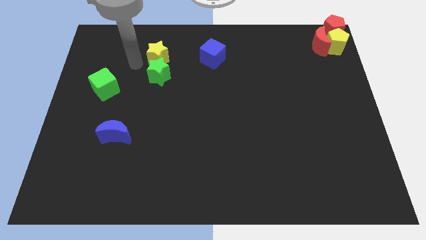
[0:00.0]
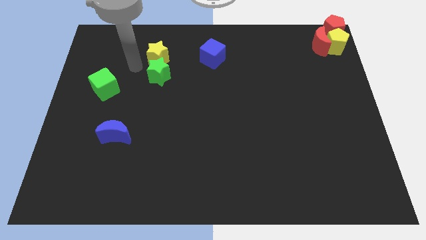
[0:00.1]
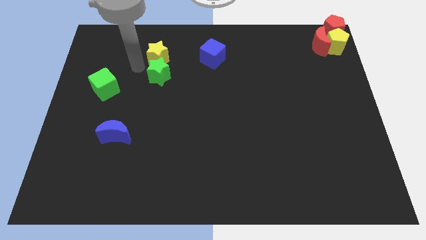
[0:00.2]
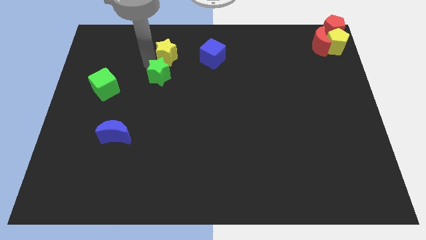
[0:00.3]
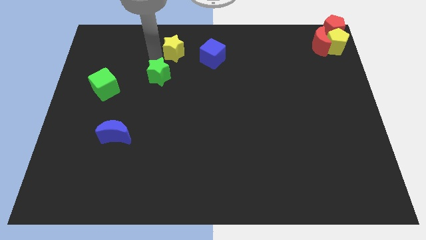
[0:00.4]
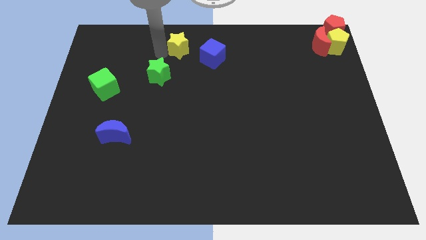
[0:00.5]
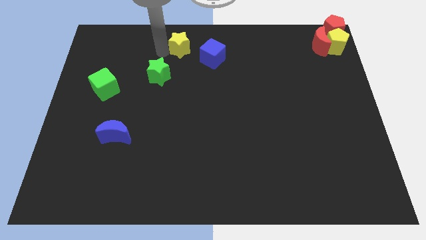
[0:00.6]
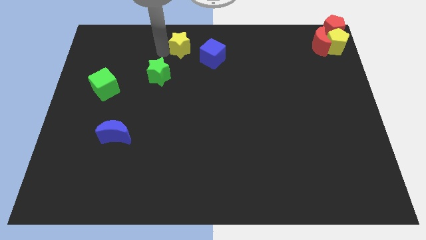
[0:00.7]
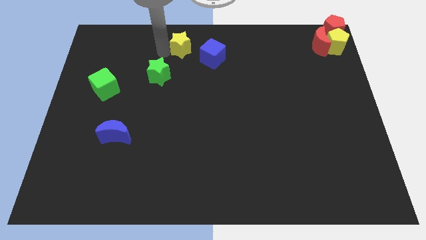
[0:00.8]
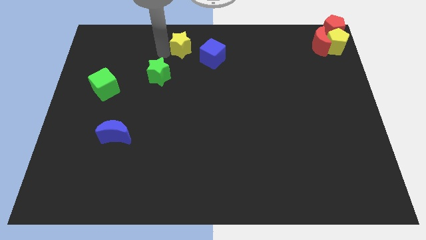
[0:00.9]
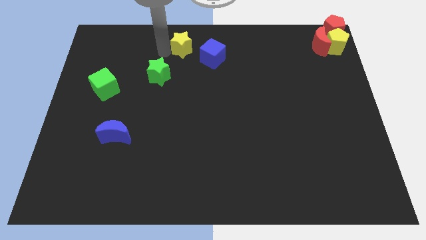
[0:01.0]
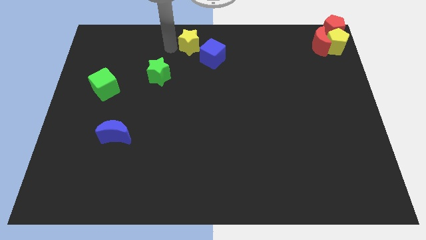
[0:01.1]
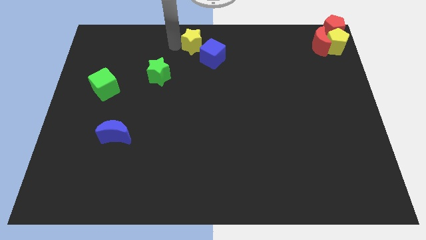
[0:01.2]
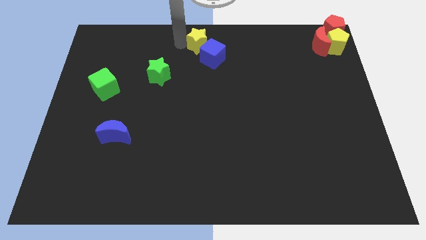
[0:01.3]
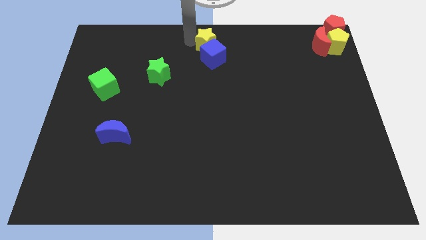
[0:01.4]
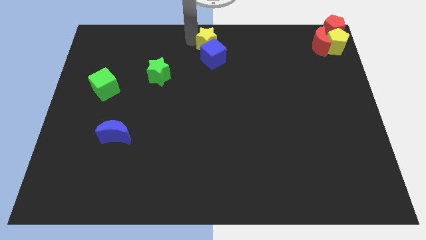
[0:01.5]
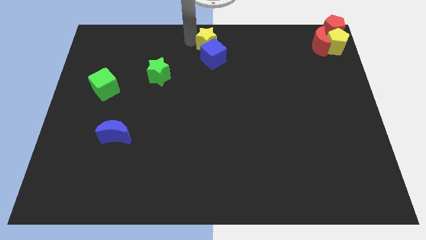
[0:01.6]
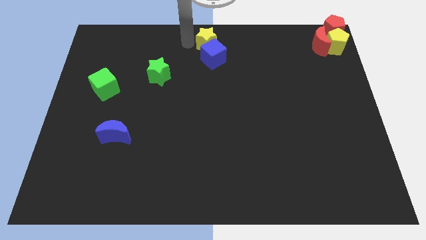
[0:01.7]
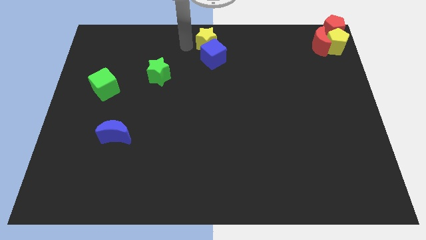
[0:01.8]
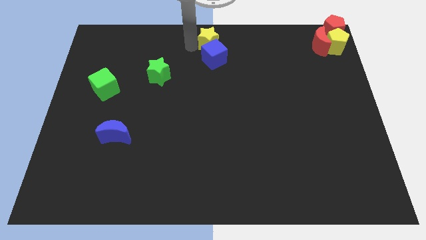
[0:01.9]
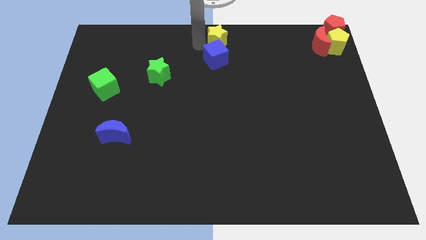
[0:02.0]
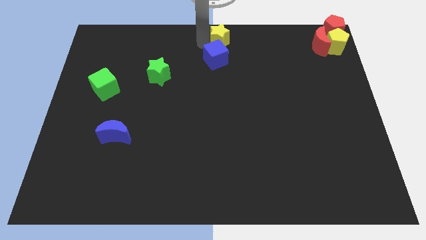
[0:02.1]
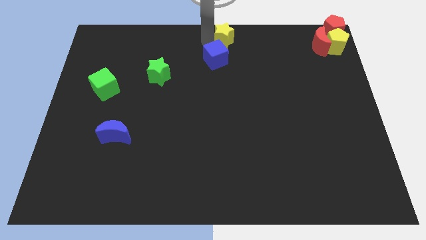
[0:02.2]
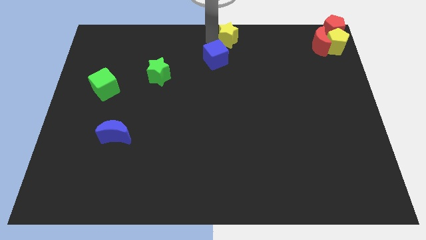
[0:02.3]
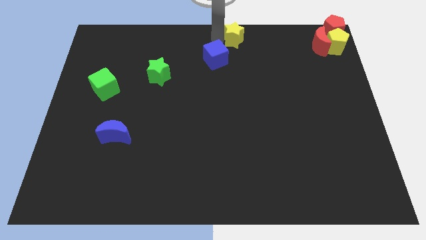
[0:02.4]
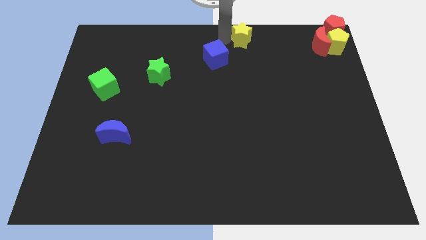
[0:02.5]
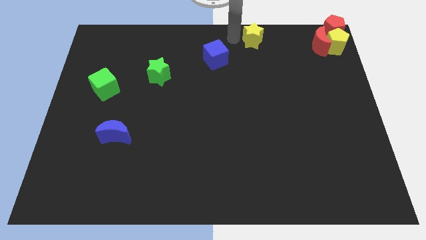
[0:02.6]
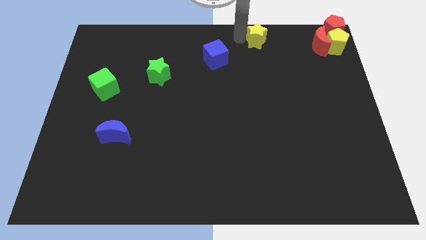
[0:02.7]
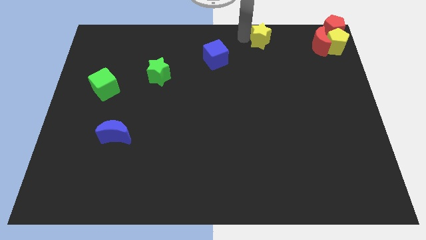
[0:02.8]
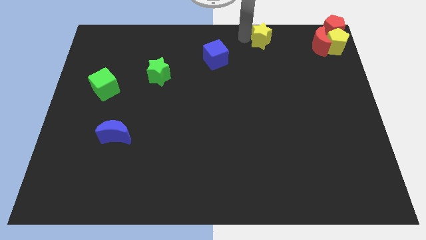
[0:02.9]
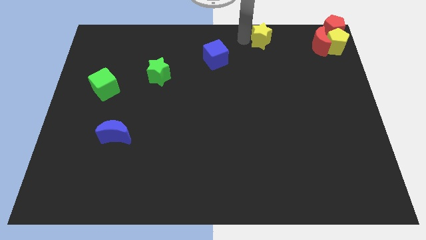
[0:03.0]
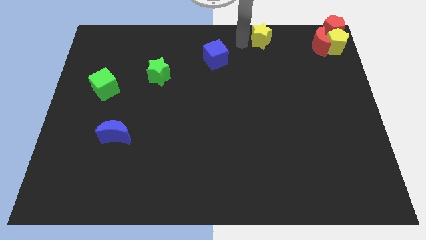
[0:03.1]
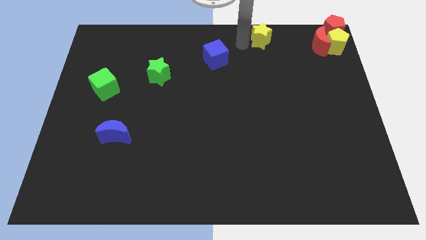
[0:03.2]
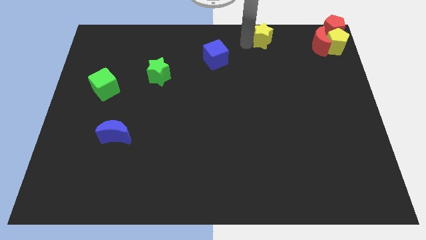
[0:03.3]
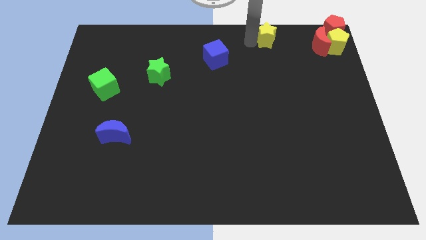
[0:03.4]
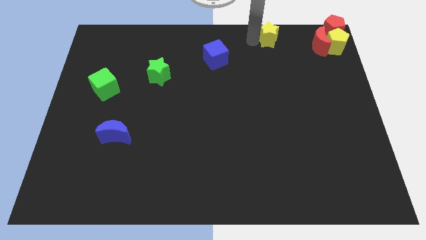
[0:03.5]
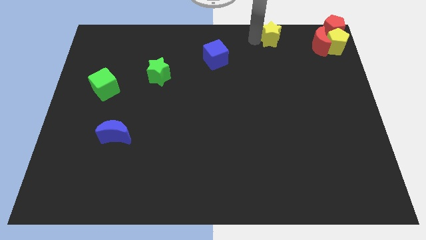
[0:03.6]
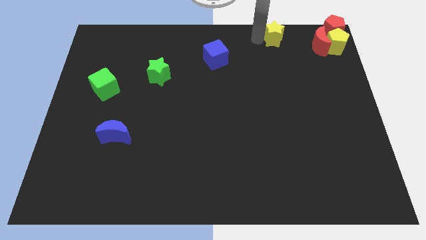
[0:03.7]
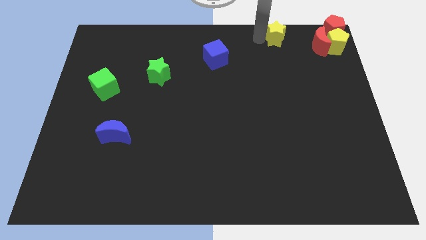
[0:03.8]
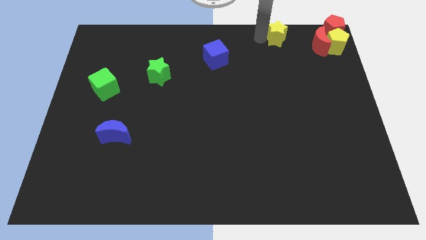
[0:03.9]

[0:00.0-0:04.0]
push the yellow star towards the group of blocks at the top right side of the board

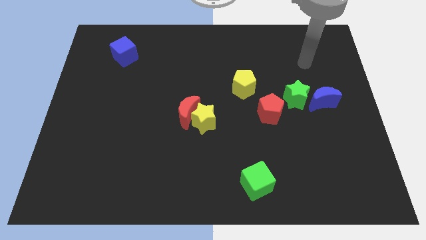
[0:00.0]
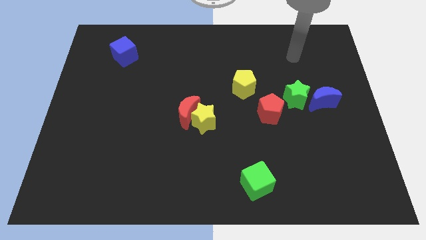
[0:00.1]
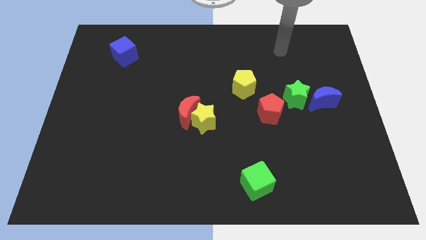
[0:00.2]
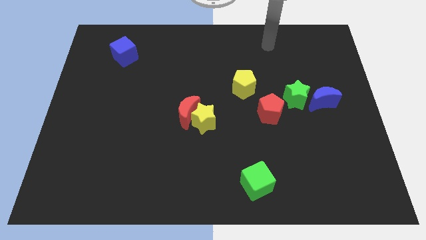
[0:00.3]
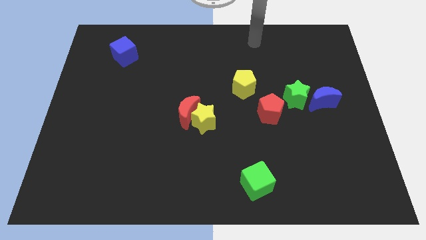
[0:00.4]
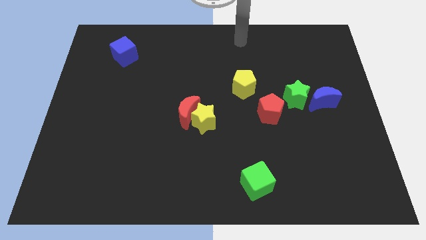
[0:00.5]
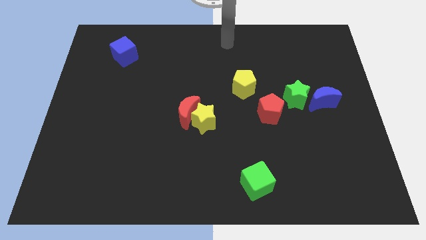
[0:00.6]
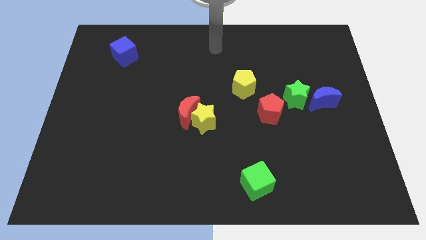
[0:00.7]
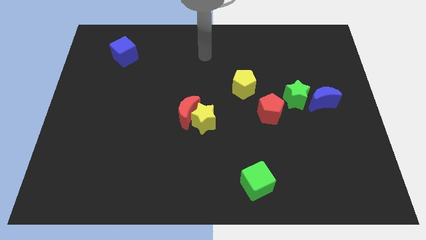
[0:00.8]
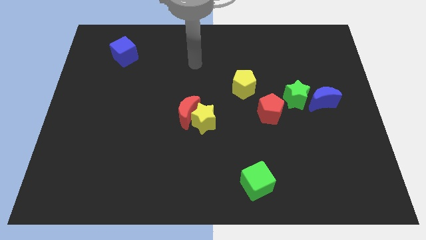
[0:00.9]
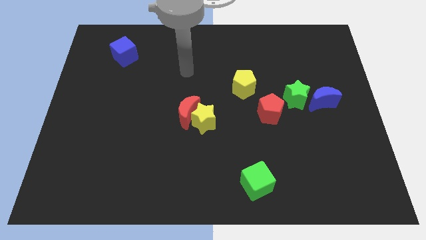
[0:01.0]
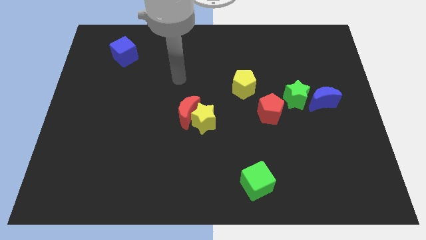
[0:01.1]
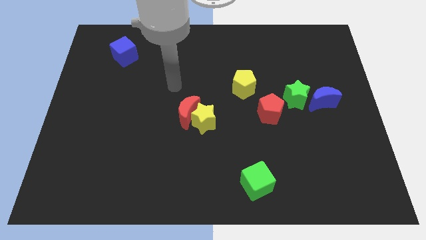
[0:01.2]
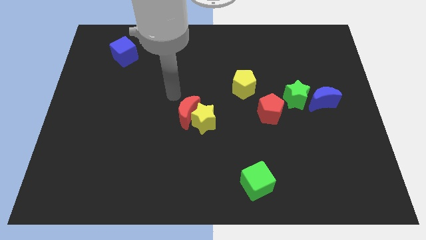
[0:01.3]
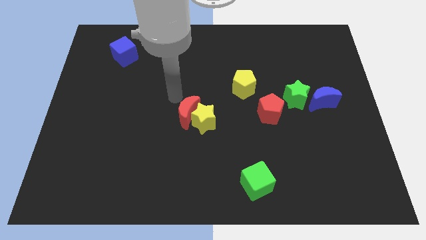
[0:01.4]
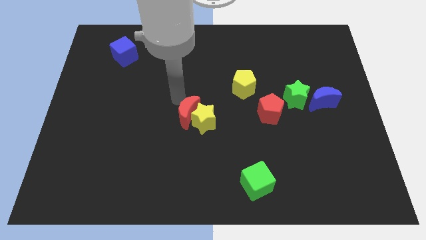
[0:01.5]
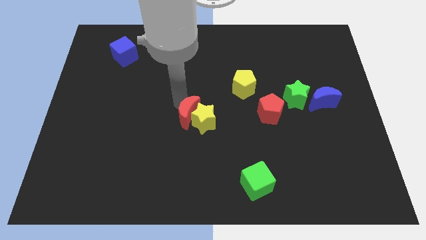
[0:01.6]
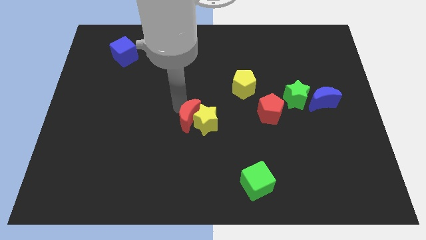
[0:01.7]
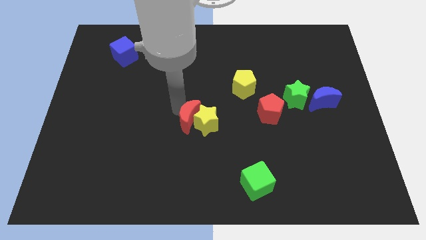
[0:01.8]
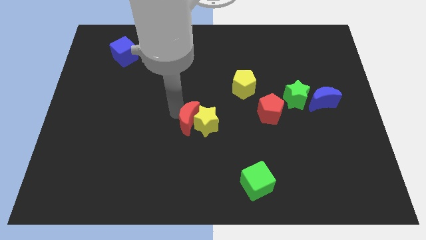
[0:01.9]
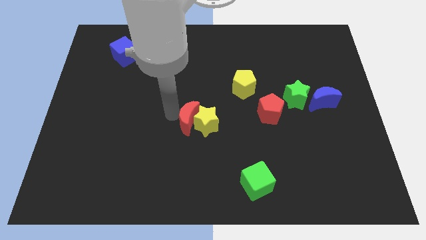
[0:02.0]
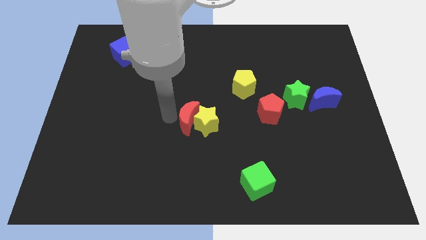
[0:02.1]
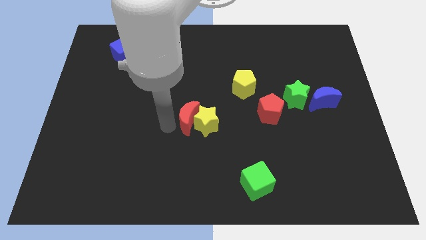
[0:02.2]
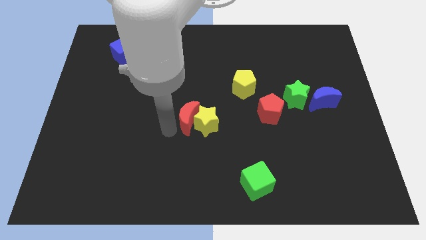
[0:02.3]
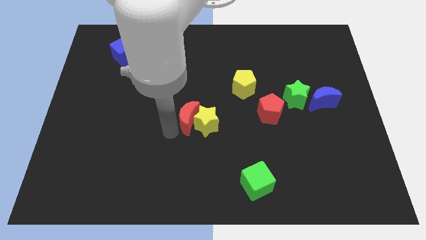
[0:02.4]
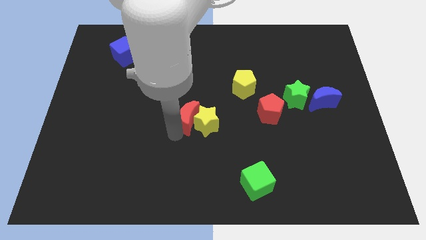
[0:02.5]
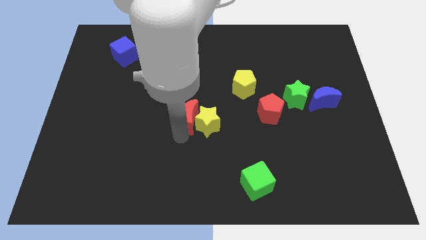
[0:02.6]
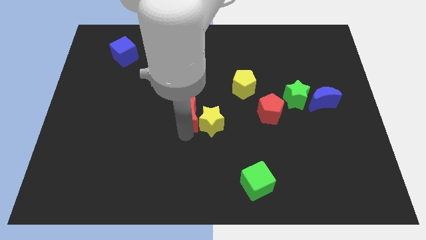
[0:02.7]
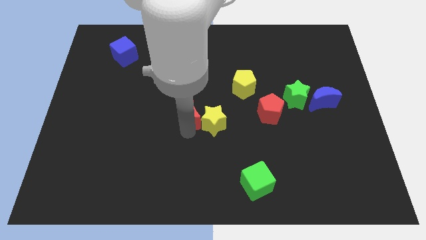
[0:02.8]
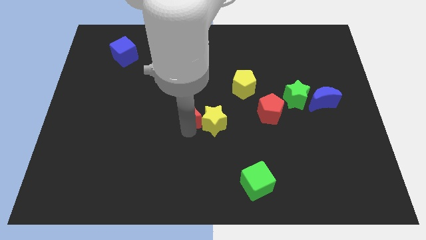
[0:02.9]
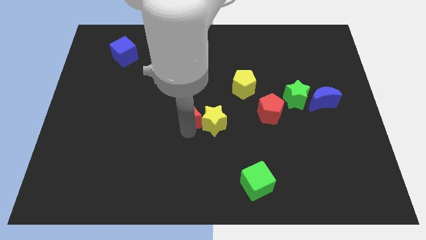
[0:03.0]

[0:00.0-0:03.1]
push the red moon and yellow star slightly to the center

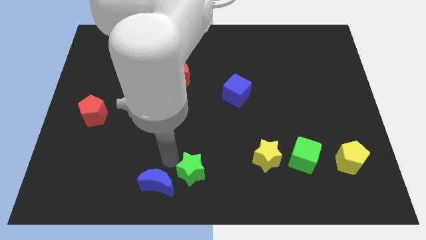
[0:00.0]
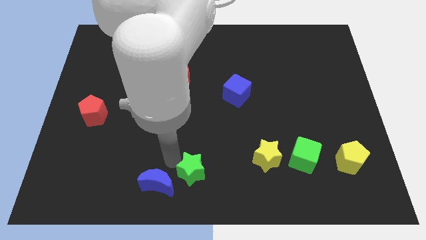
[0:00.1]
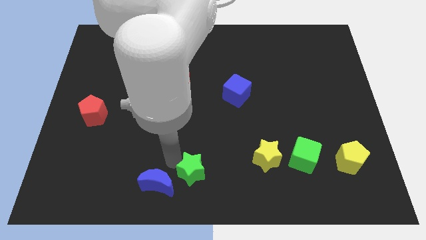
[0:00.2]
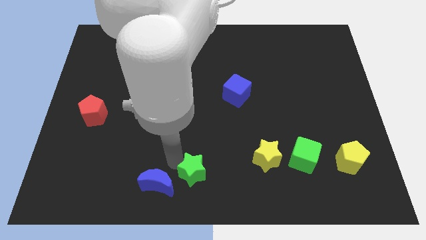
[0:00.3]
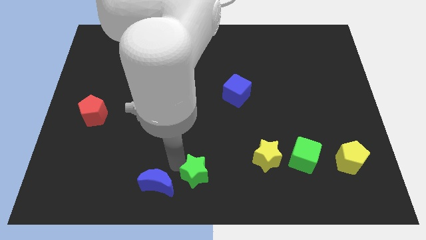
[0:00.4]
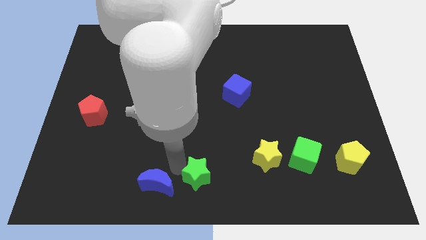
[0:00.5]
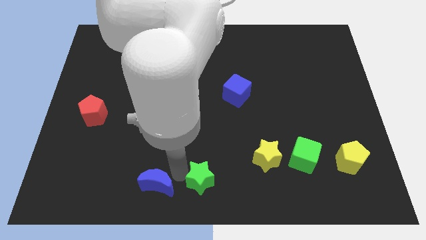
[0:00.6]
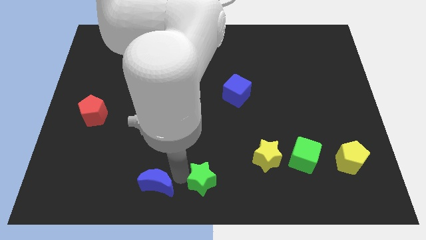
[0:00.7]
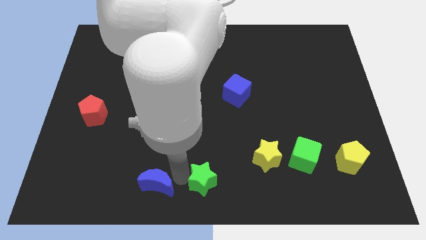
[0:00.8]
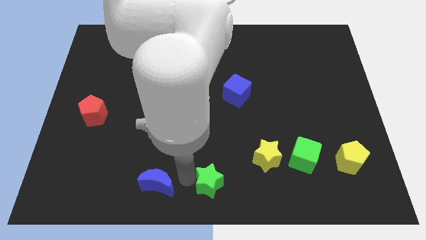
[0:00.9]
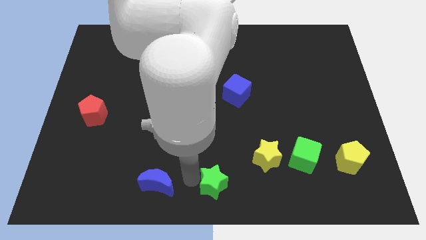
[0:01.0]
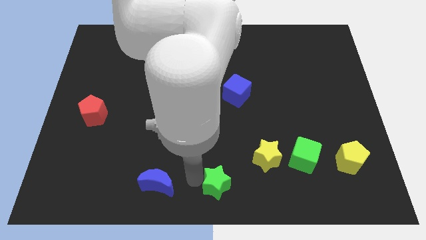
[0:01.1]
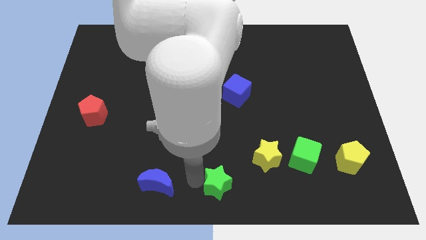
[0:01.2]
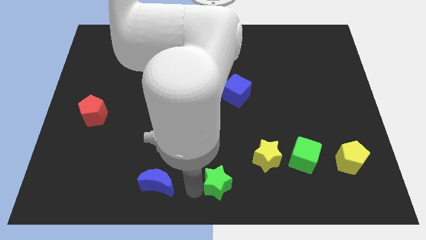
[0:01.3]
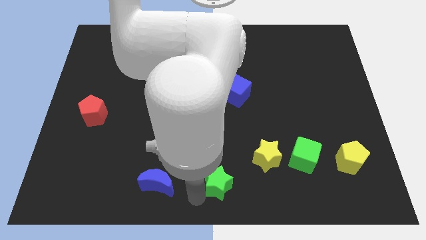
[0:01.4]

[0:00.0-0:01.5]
move the green star parallel to the right of the blue moon

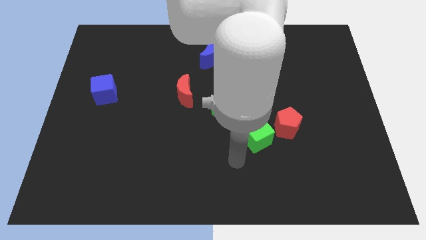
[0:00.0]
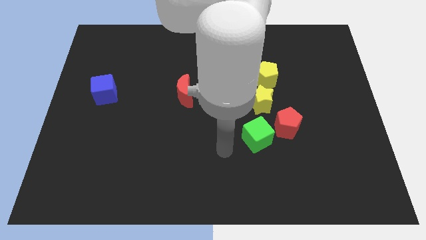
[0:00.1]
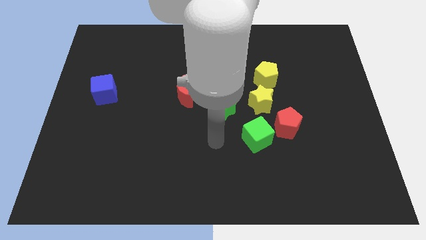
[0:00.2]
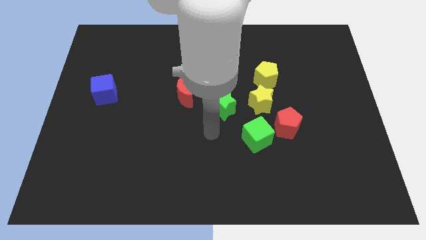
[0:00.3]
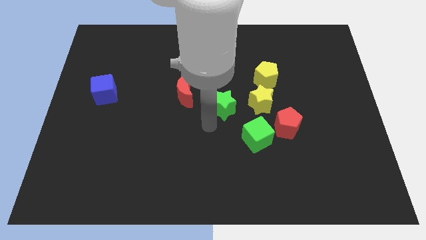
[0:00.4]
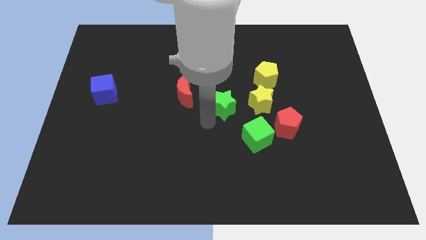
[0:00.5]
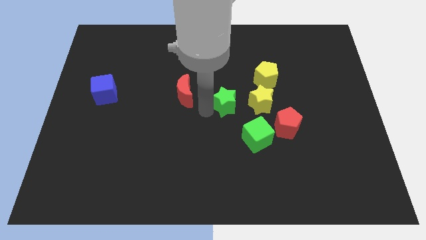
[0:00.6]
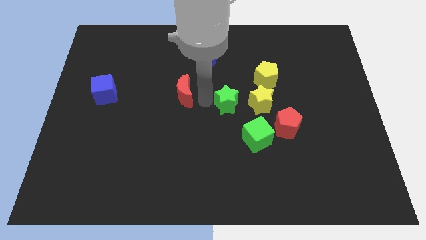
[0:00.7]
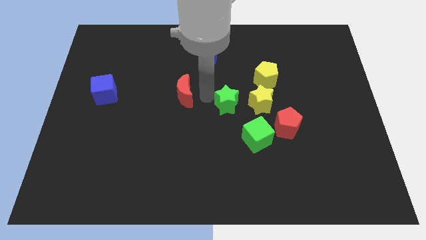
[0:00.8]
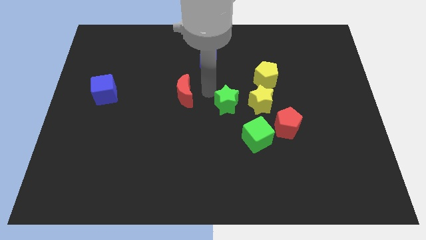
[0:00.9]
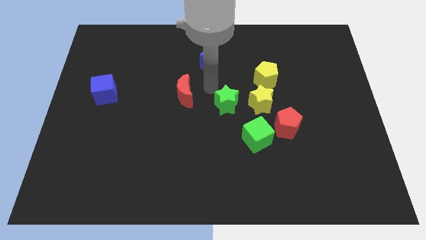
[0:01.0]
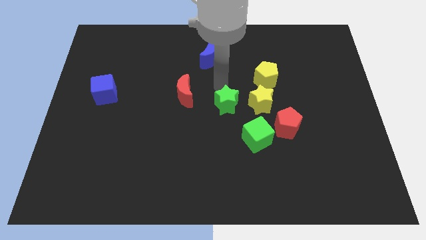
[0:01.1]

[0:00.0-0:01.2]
slightly push the green star to the left side of the yellow star
